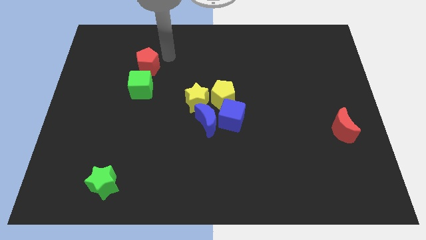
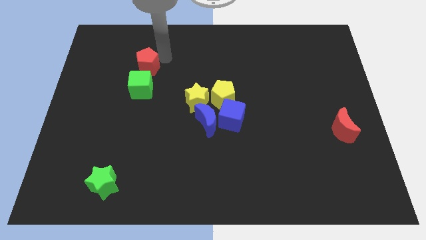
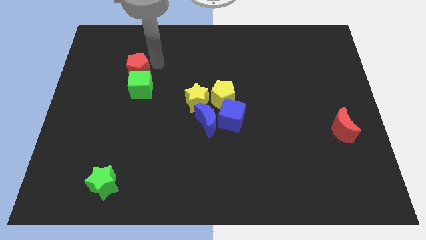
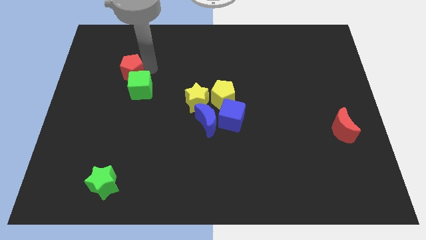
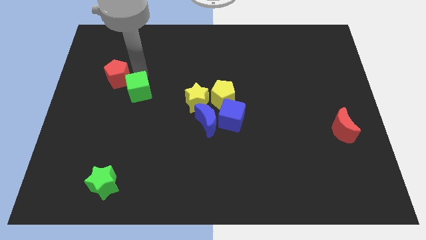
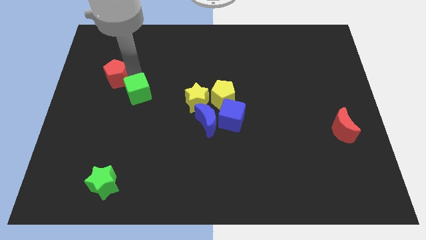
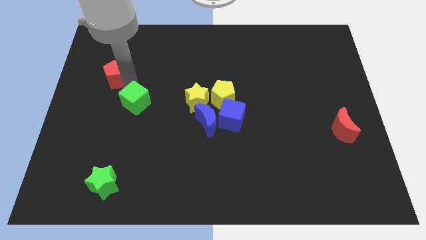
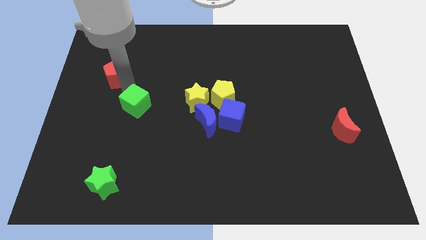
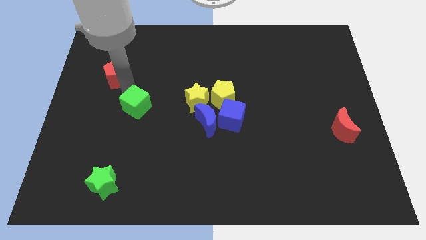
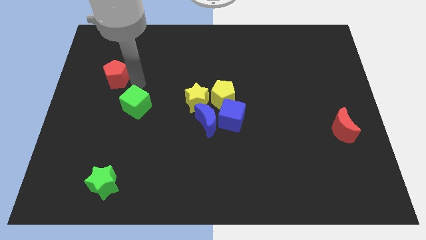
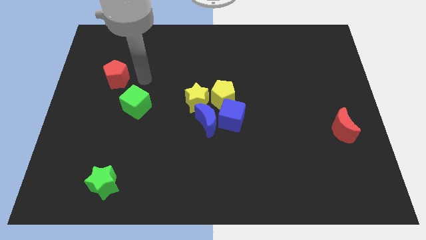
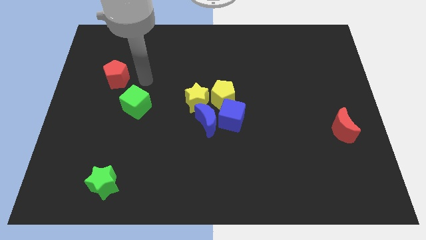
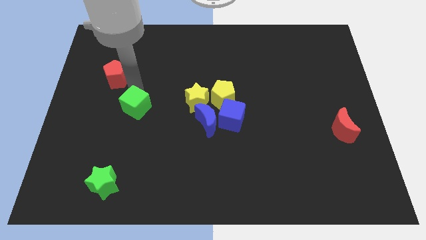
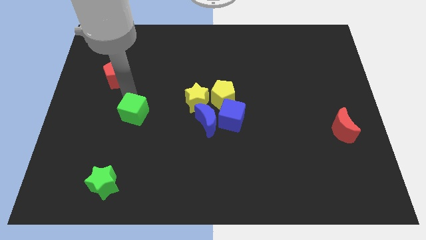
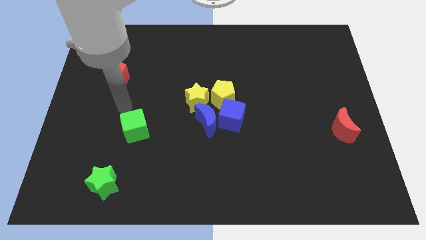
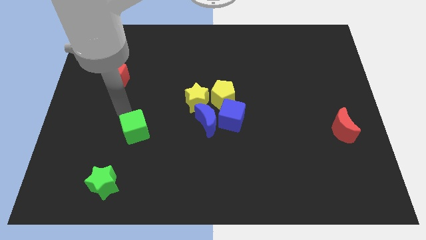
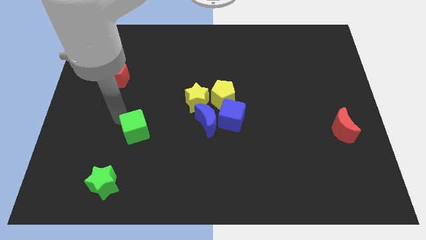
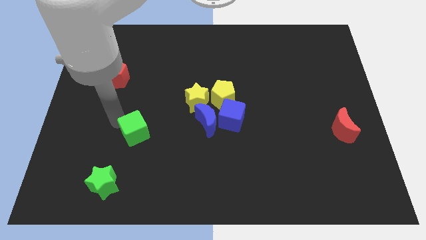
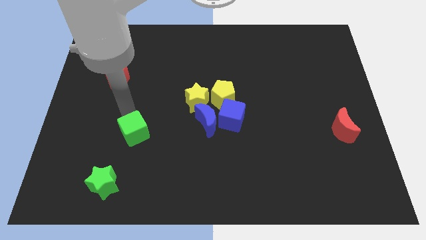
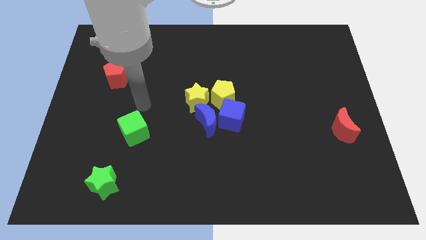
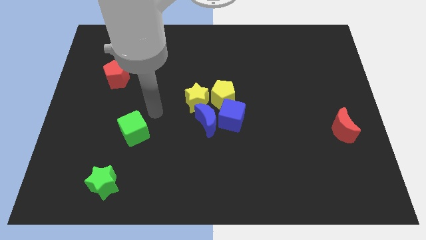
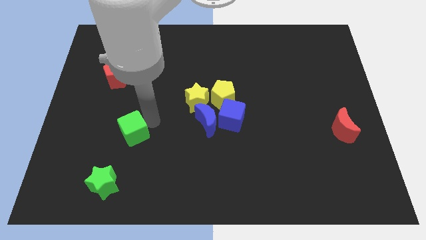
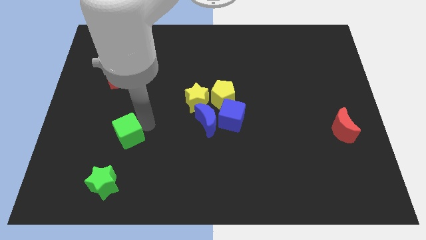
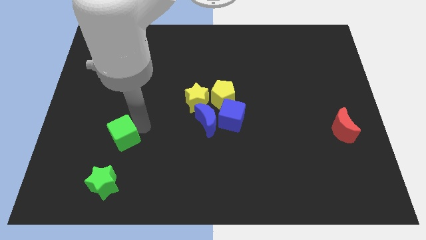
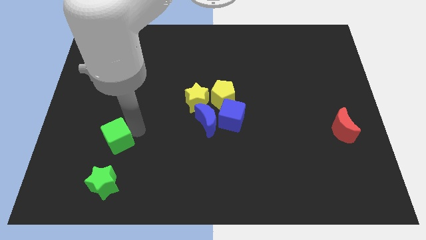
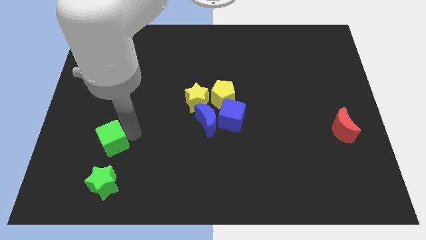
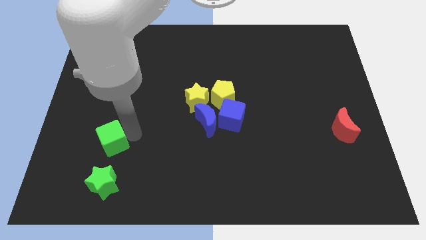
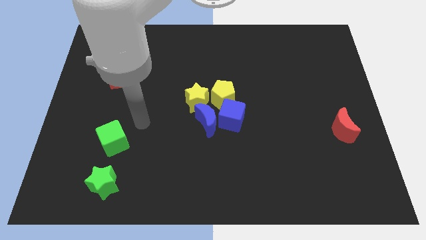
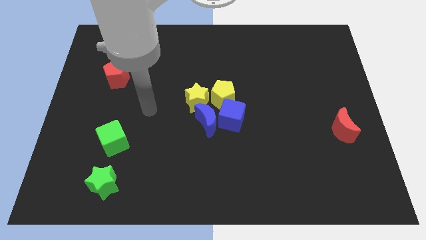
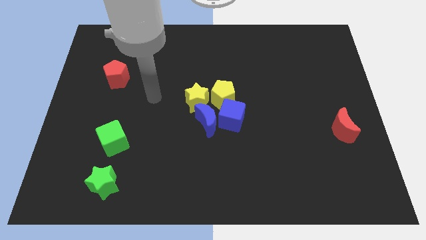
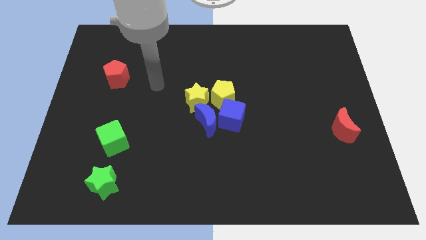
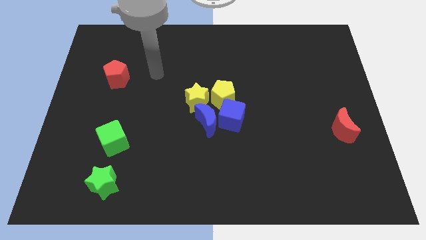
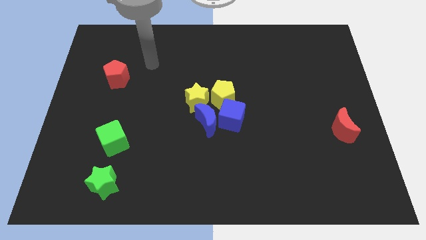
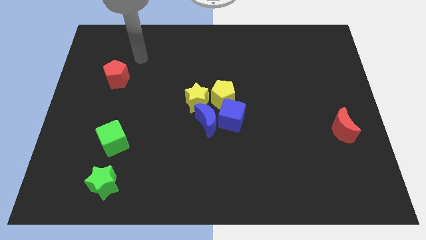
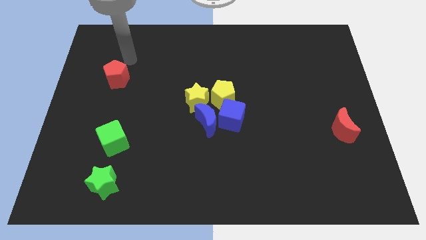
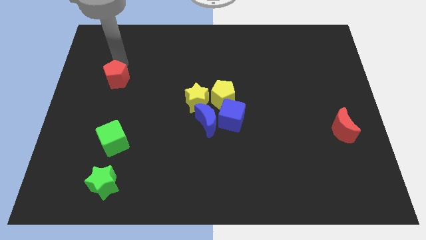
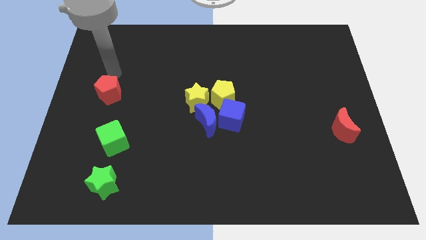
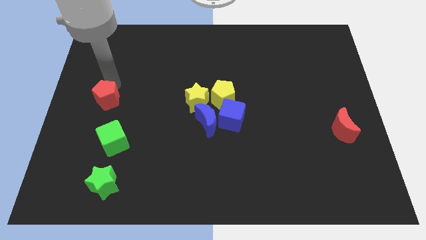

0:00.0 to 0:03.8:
place the green cube above the green star

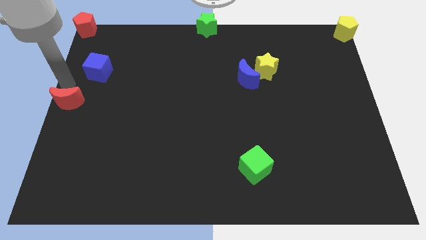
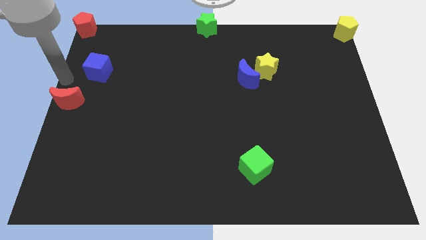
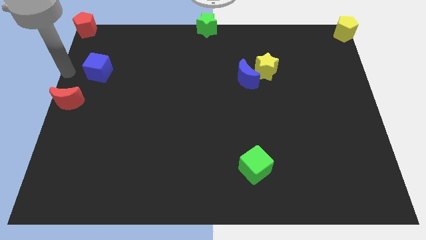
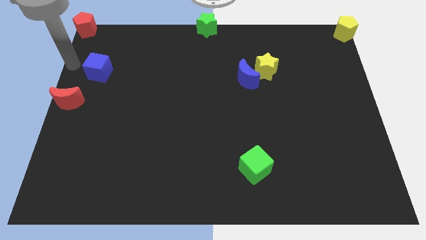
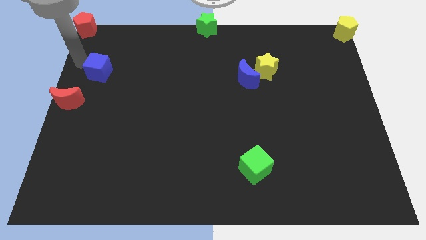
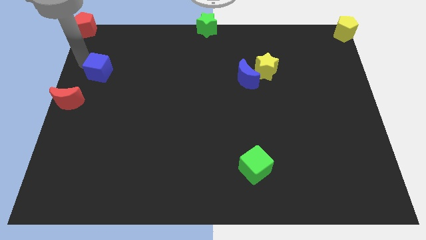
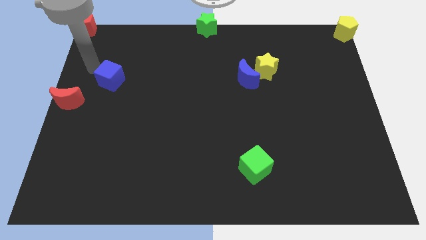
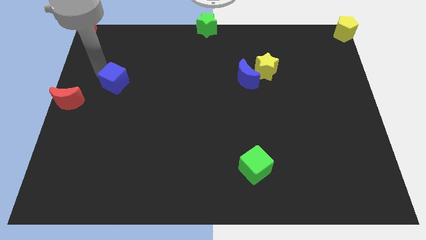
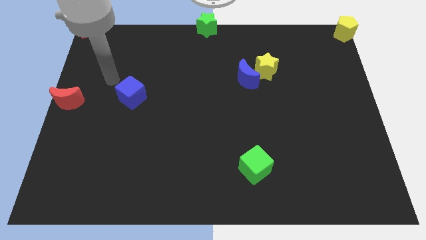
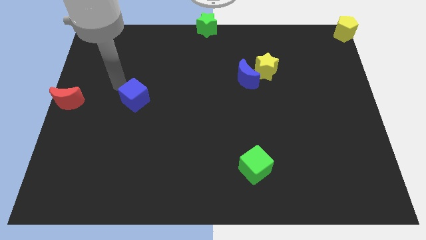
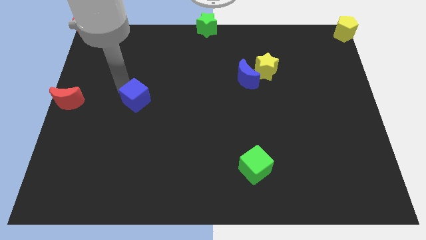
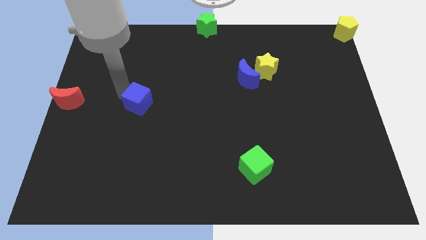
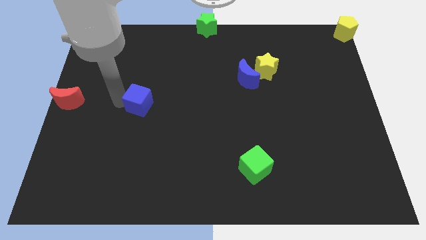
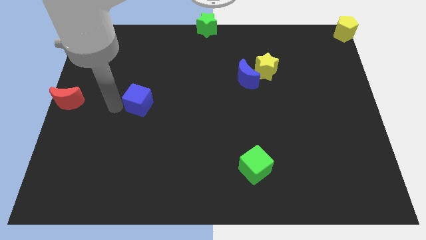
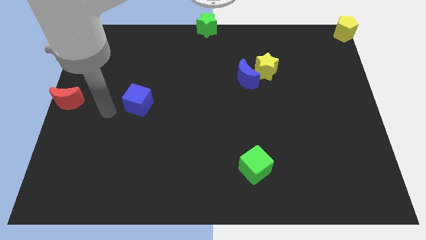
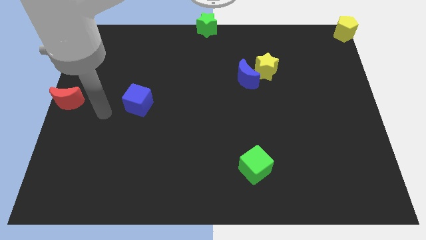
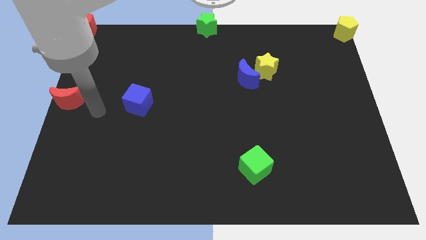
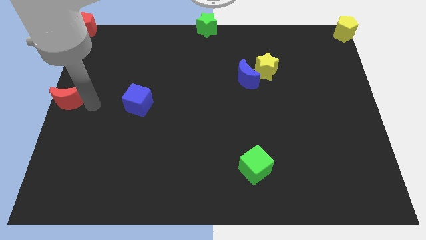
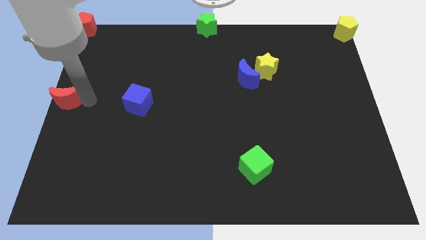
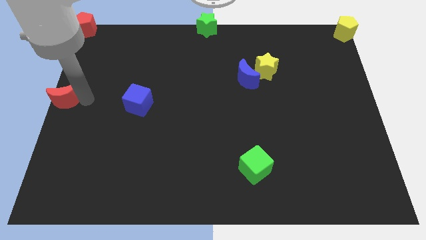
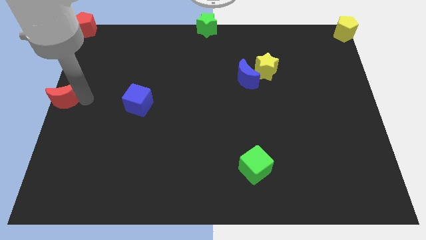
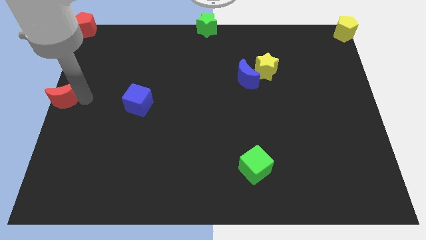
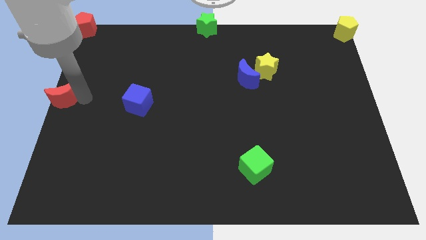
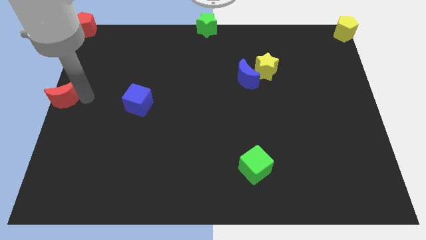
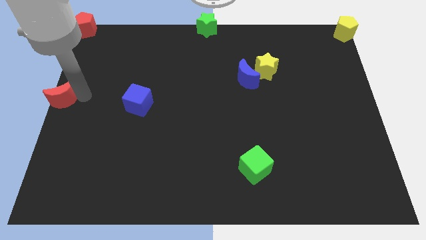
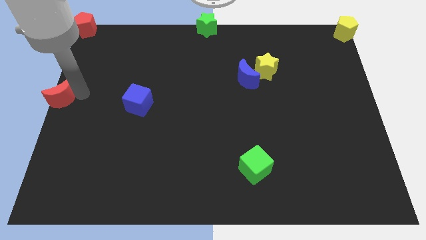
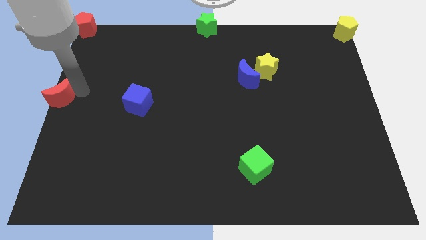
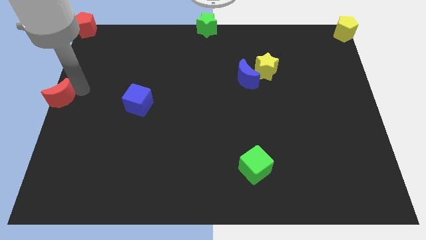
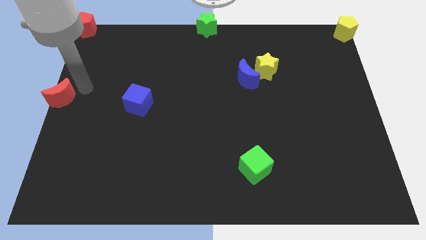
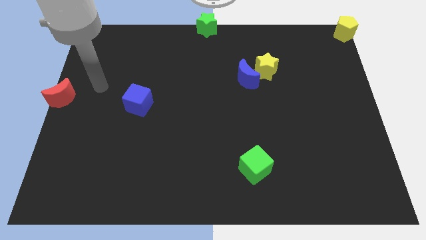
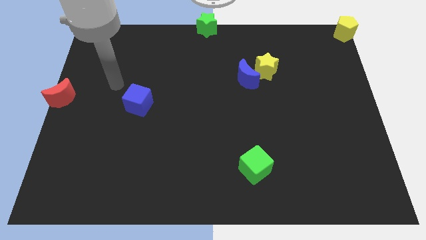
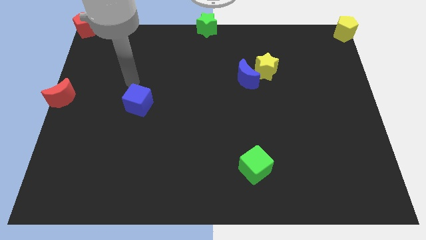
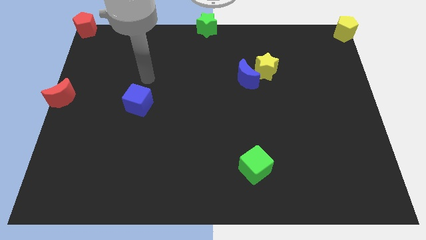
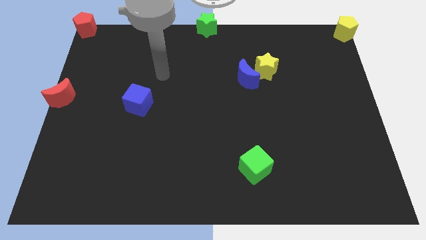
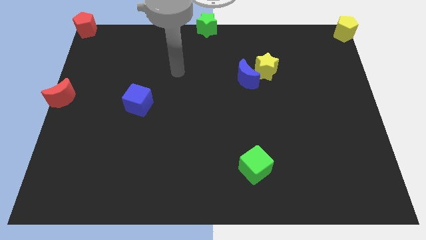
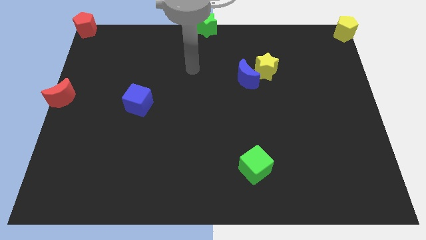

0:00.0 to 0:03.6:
place the red moon and blue cube parallel to each other

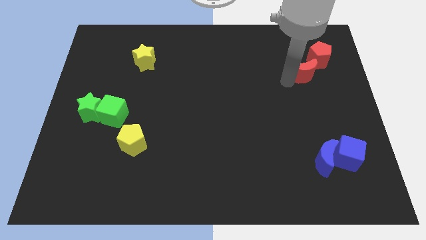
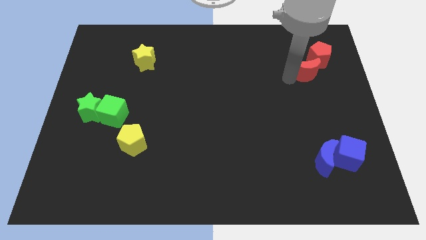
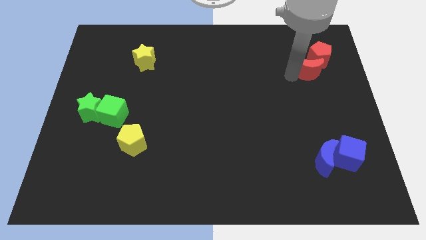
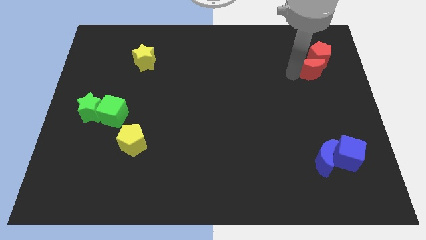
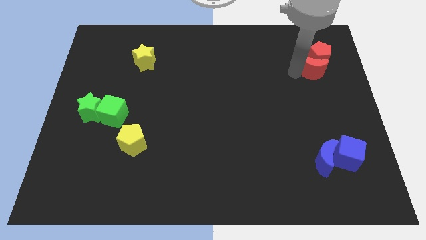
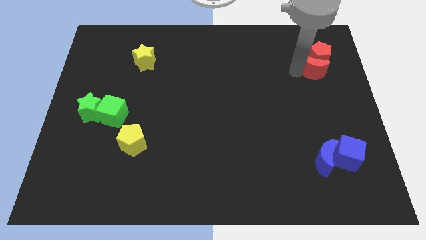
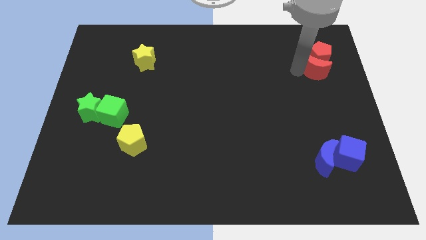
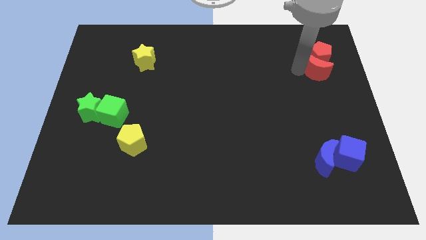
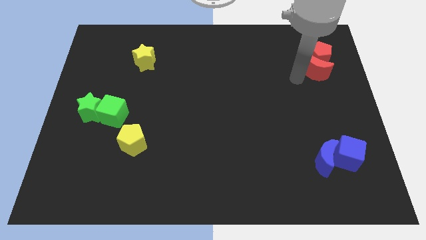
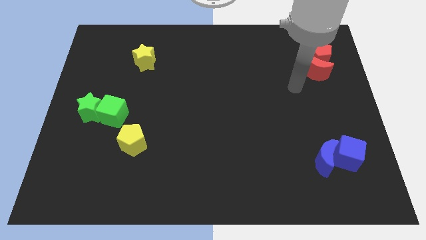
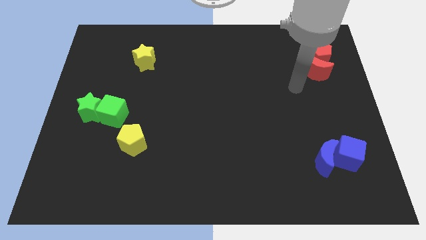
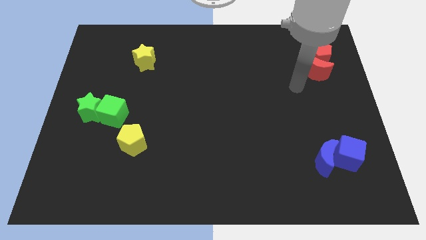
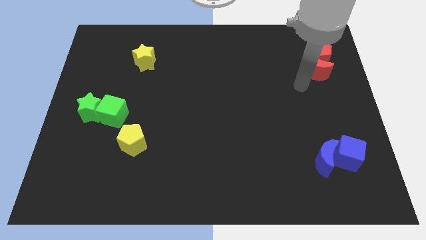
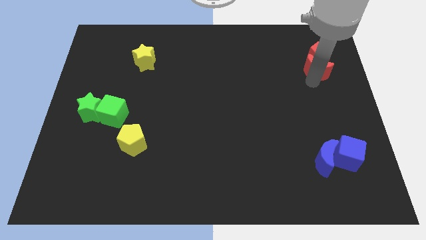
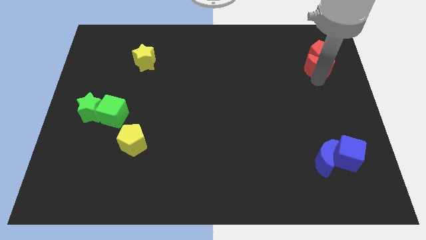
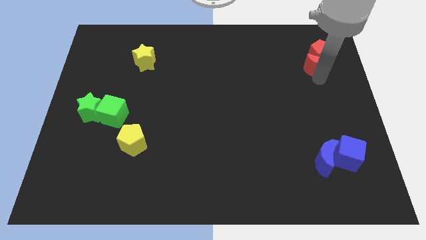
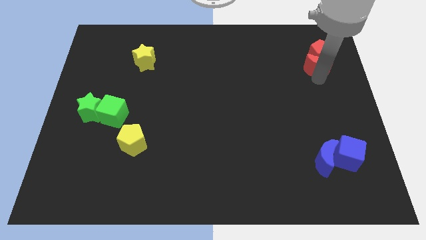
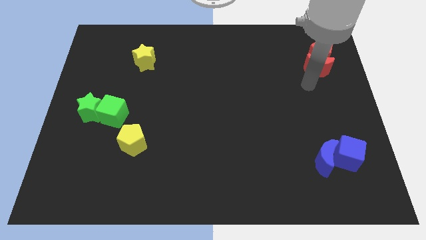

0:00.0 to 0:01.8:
group up the red blocks above the blue blocks
